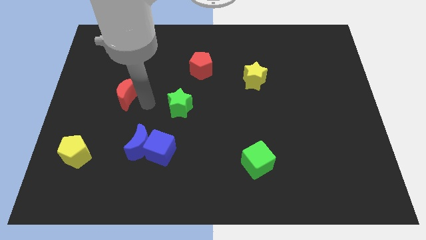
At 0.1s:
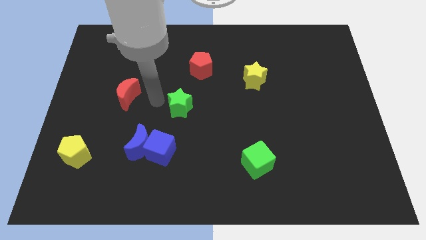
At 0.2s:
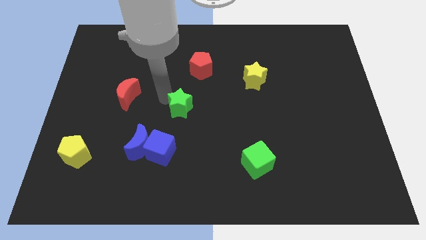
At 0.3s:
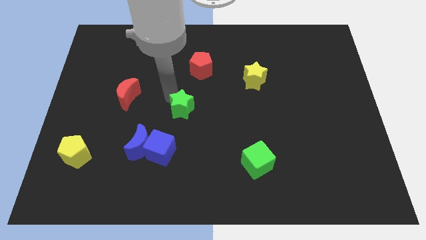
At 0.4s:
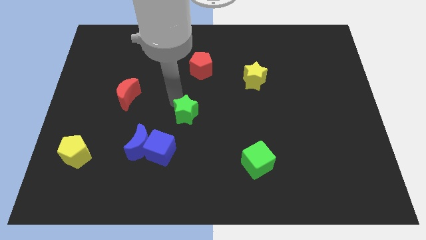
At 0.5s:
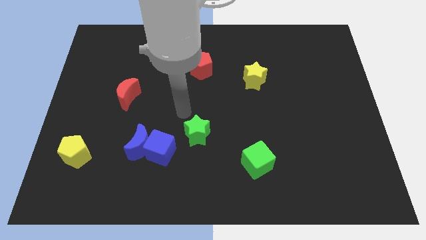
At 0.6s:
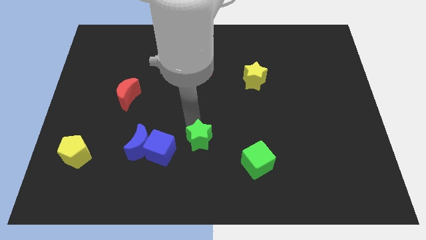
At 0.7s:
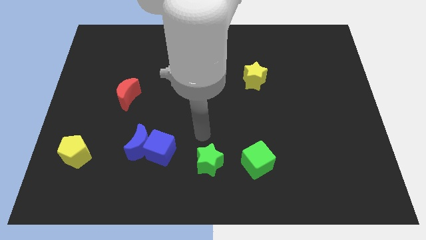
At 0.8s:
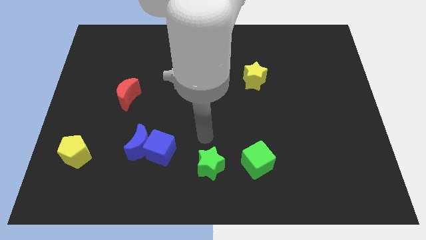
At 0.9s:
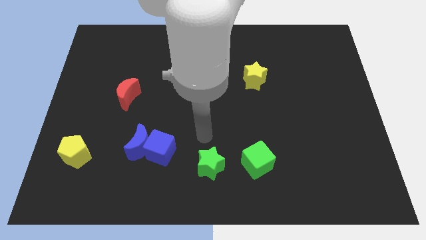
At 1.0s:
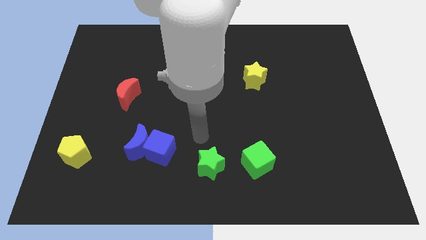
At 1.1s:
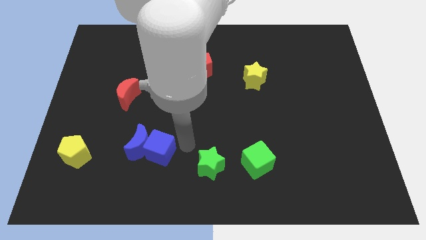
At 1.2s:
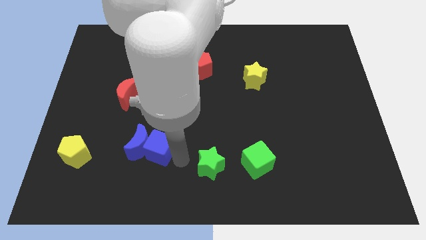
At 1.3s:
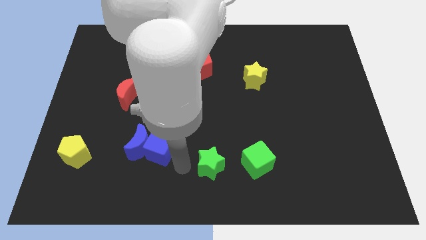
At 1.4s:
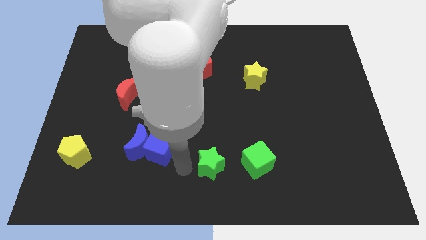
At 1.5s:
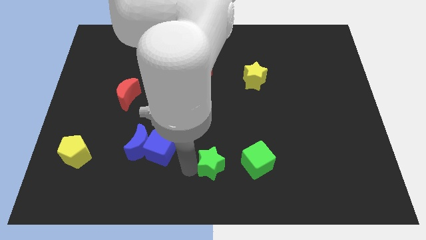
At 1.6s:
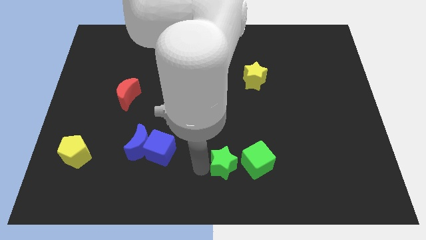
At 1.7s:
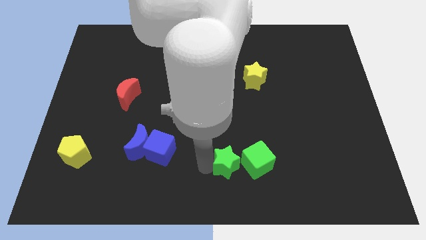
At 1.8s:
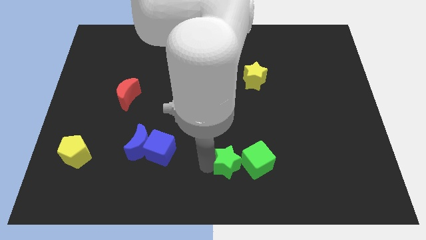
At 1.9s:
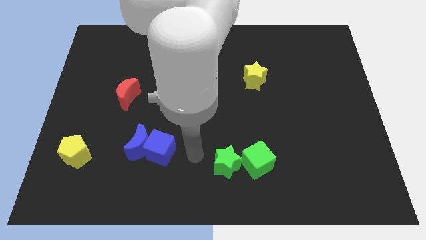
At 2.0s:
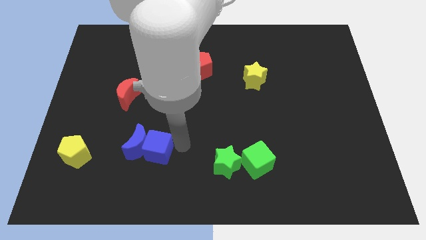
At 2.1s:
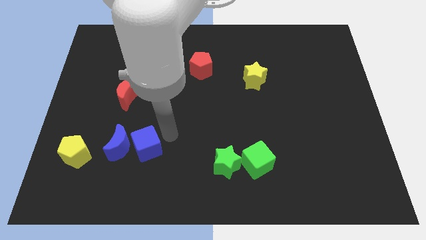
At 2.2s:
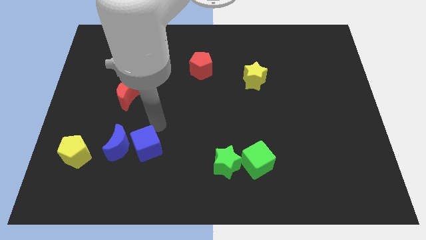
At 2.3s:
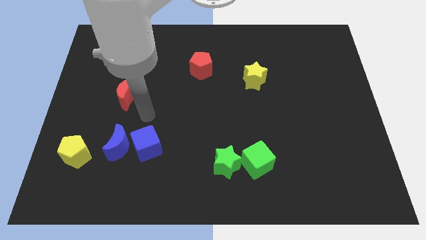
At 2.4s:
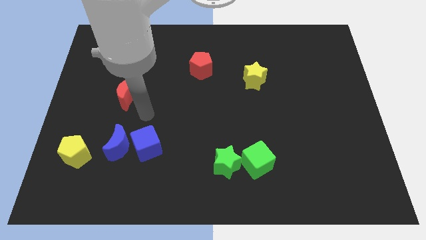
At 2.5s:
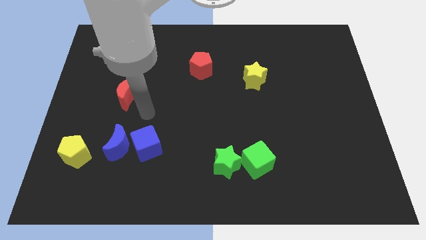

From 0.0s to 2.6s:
move the green star close to the left side of the green cube

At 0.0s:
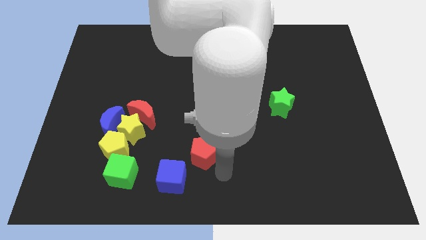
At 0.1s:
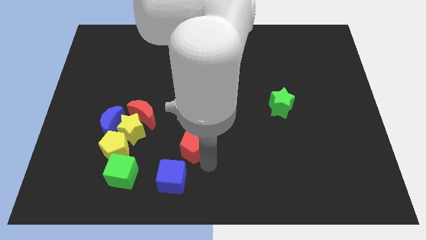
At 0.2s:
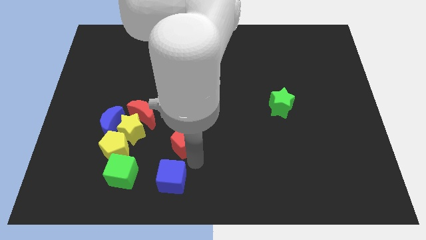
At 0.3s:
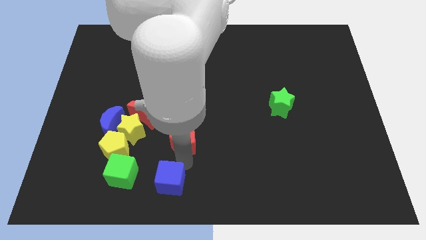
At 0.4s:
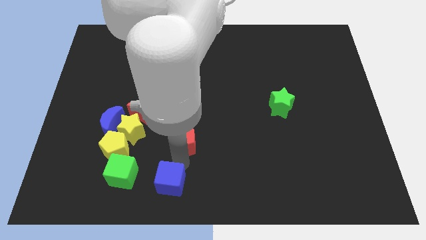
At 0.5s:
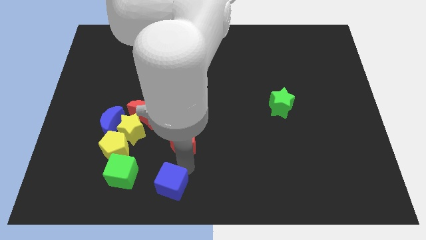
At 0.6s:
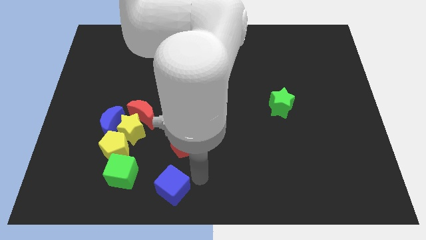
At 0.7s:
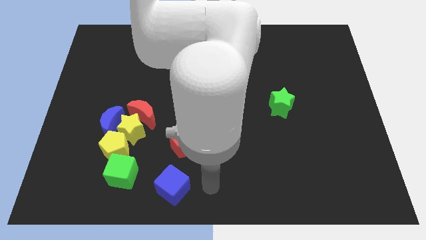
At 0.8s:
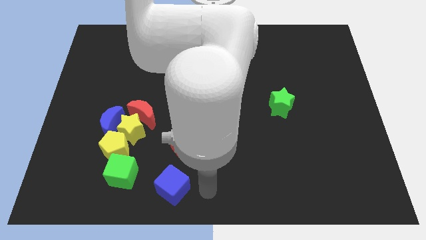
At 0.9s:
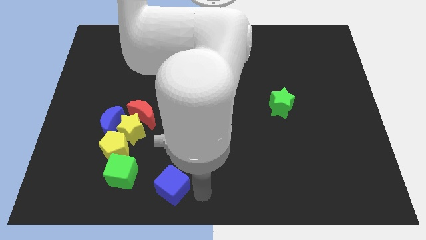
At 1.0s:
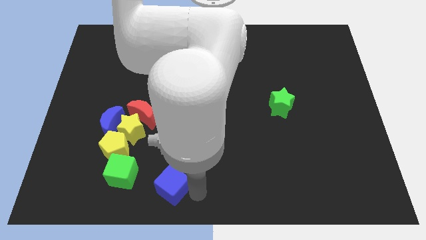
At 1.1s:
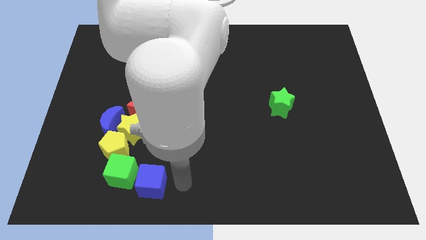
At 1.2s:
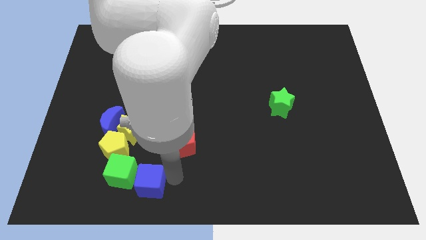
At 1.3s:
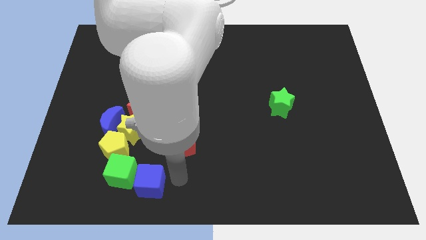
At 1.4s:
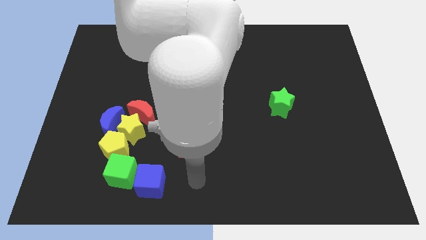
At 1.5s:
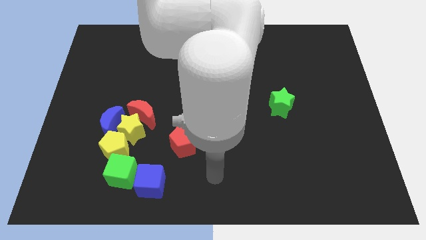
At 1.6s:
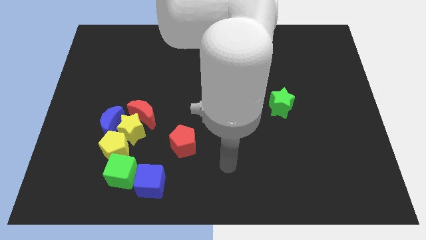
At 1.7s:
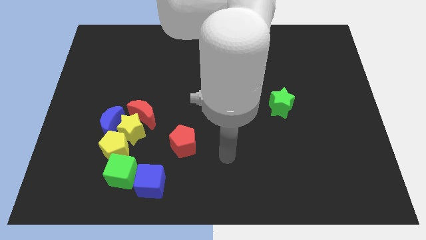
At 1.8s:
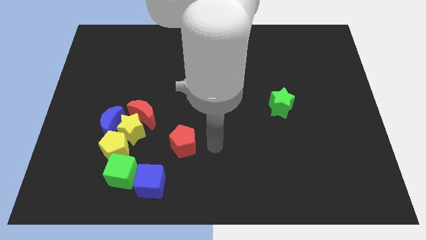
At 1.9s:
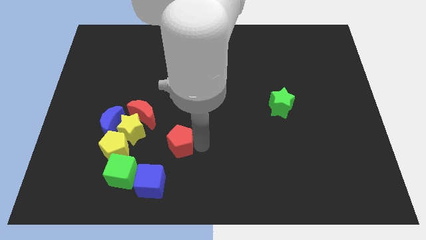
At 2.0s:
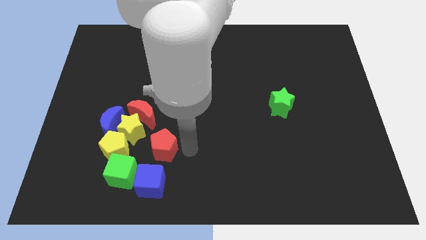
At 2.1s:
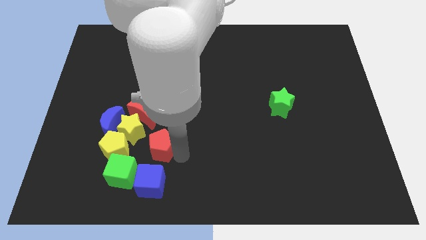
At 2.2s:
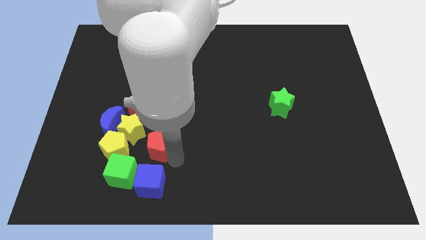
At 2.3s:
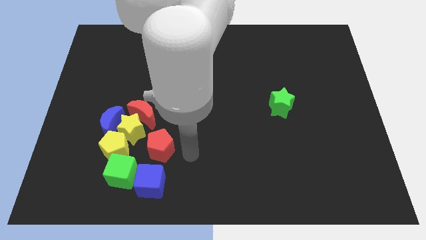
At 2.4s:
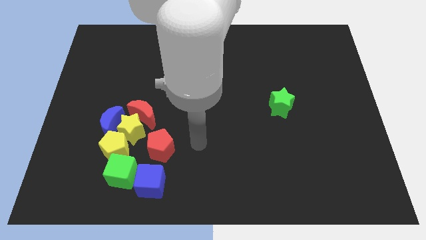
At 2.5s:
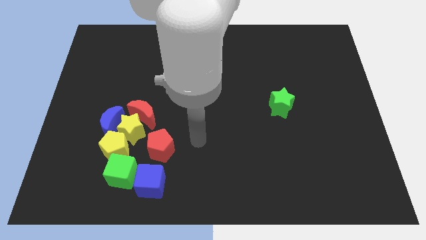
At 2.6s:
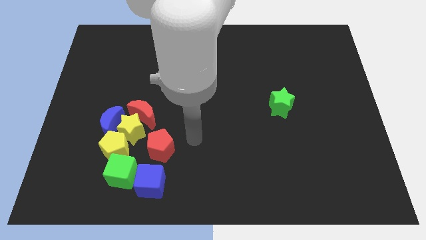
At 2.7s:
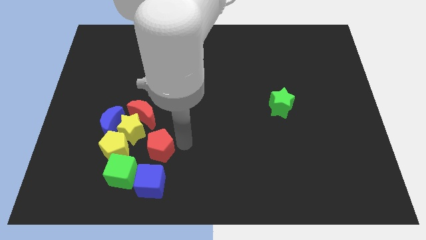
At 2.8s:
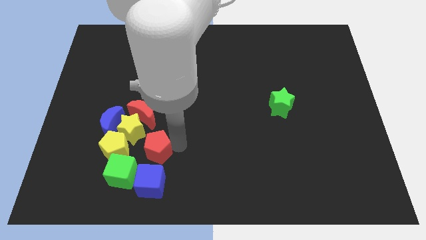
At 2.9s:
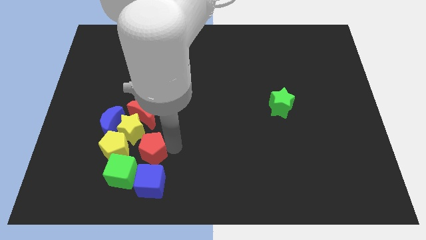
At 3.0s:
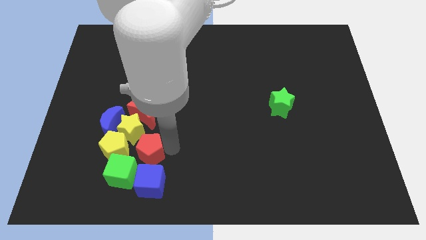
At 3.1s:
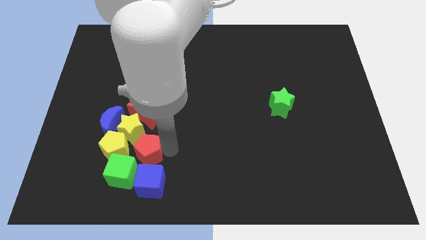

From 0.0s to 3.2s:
make a group of all the blocks except green star

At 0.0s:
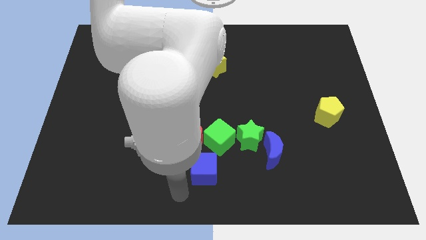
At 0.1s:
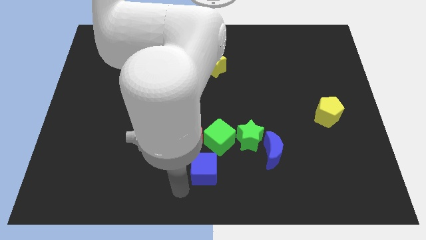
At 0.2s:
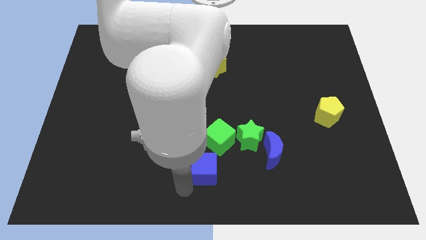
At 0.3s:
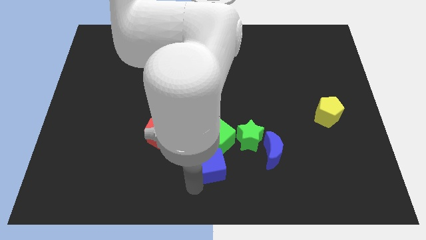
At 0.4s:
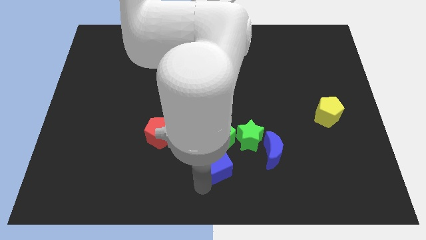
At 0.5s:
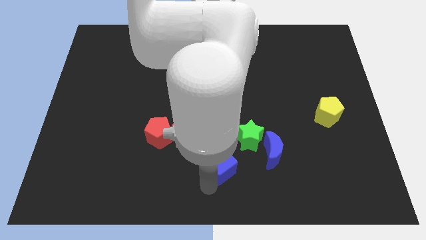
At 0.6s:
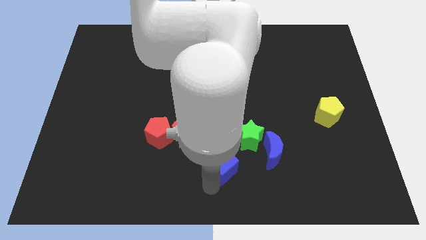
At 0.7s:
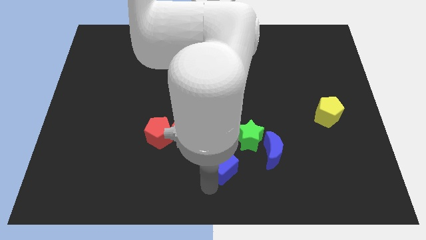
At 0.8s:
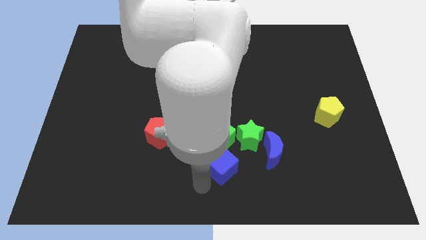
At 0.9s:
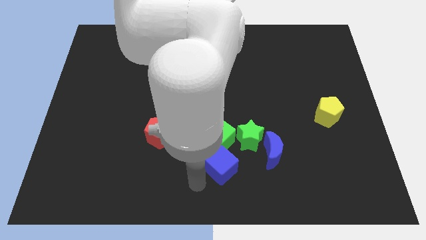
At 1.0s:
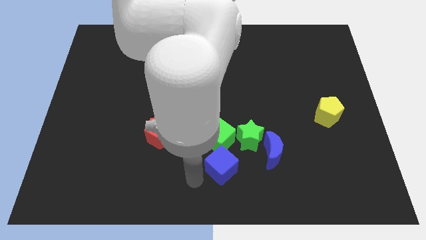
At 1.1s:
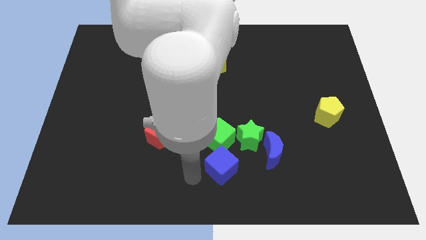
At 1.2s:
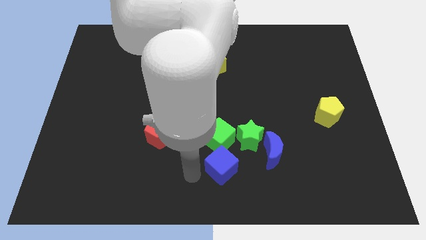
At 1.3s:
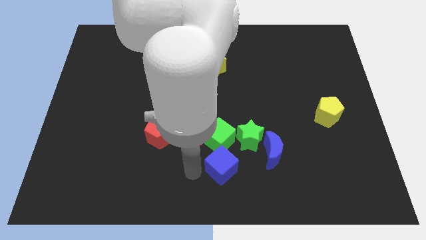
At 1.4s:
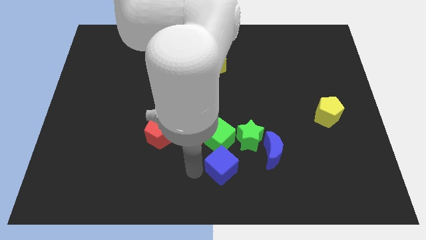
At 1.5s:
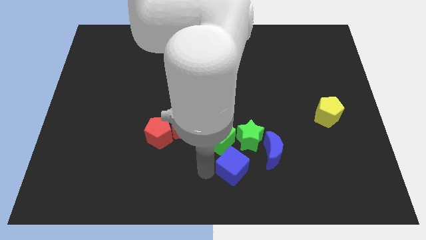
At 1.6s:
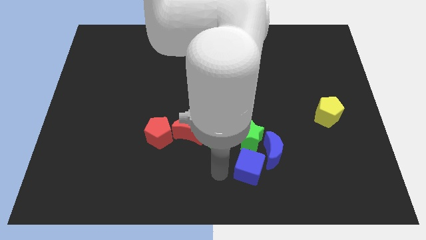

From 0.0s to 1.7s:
move blue cube towards blue crescent

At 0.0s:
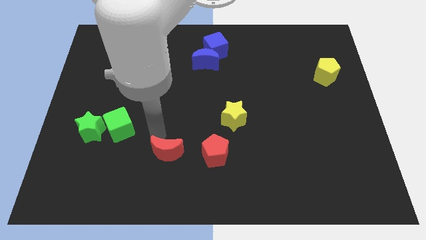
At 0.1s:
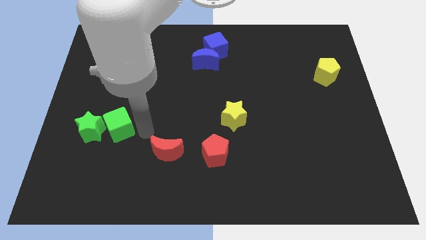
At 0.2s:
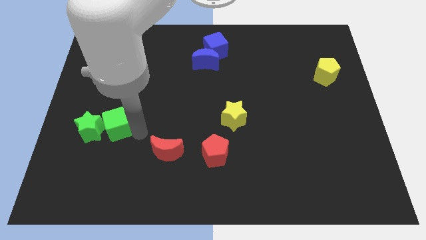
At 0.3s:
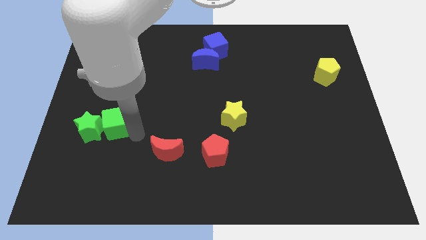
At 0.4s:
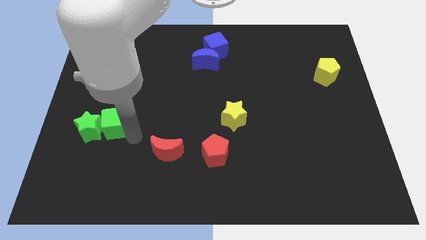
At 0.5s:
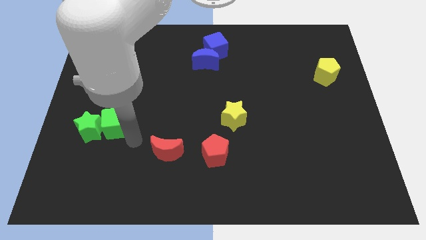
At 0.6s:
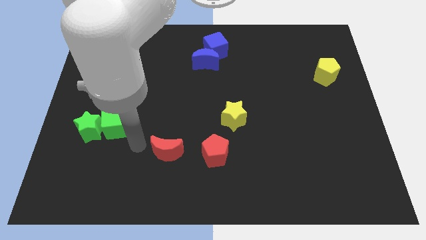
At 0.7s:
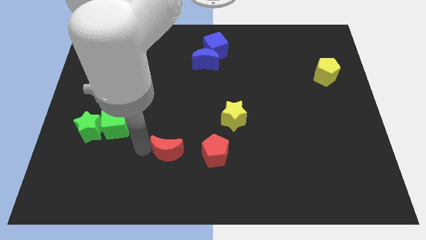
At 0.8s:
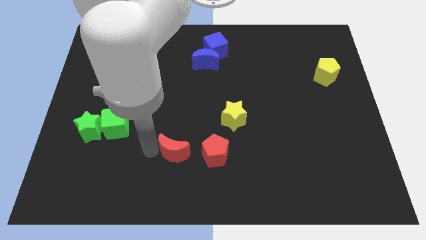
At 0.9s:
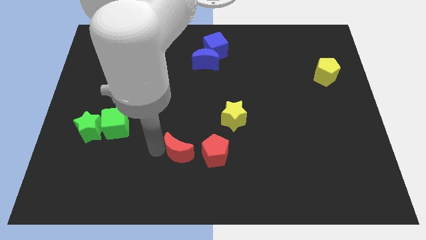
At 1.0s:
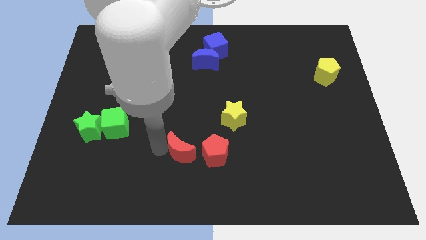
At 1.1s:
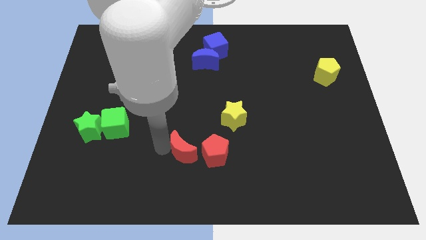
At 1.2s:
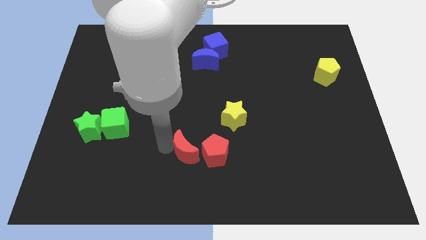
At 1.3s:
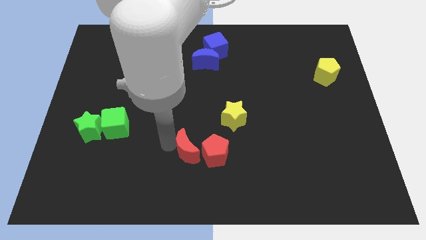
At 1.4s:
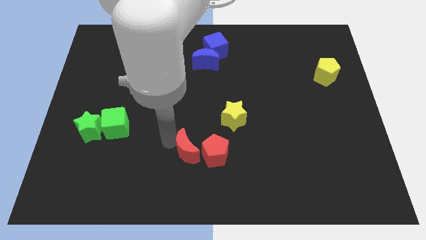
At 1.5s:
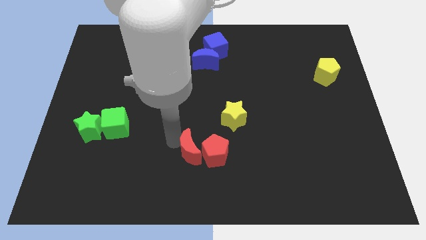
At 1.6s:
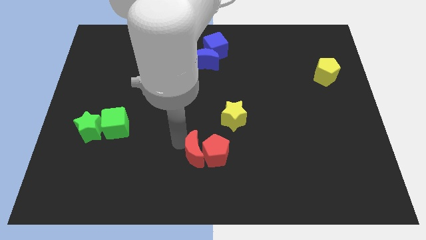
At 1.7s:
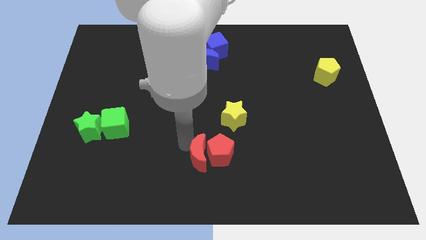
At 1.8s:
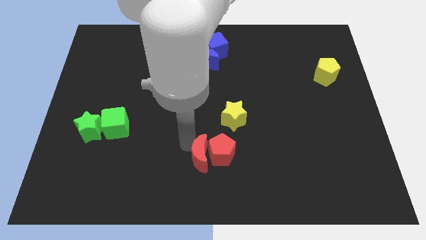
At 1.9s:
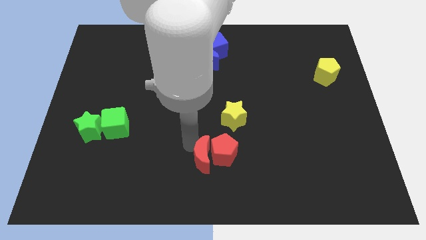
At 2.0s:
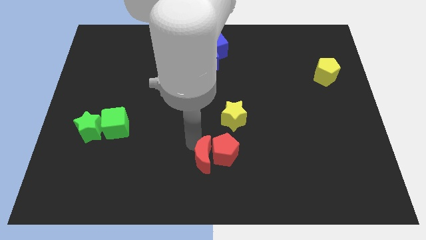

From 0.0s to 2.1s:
push the red crescent into the red pentagon
